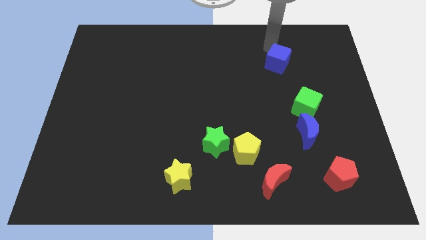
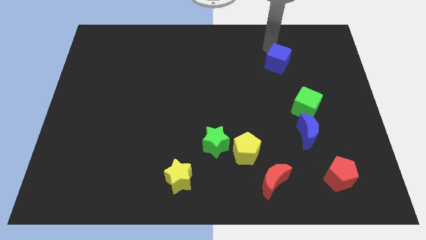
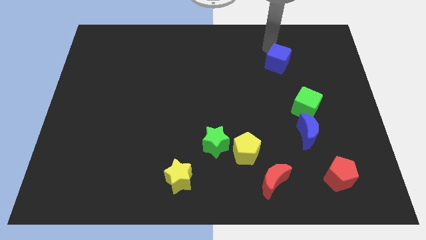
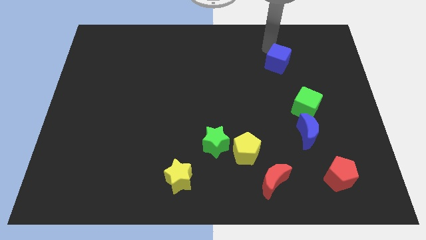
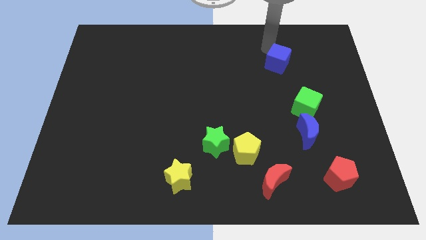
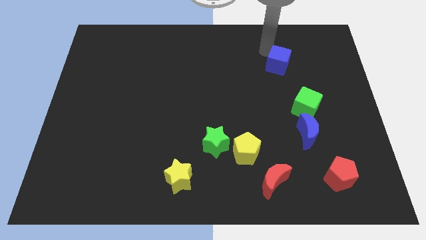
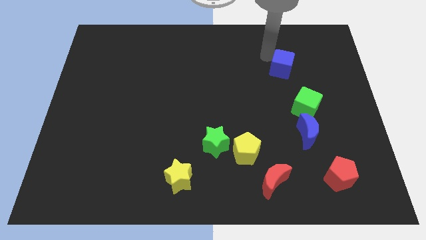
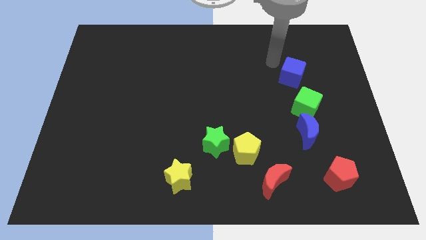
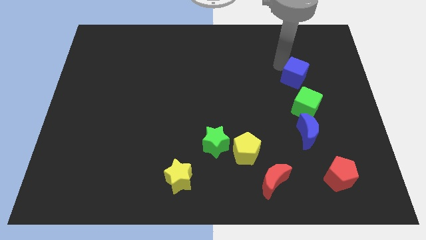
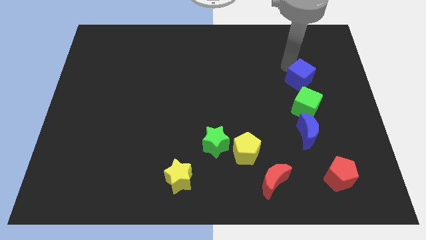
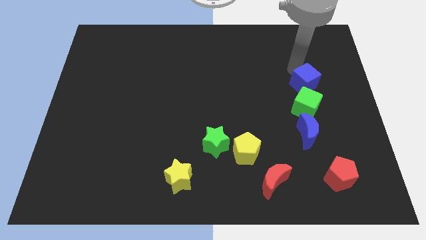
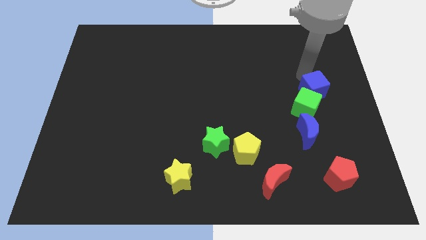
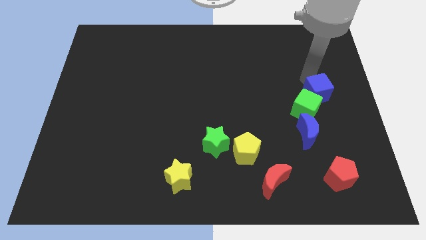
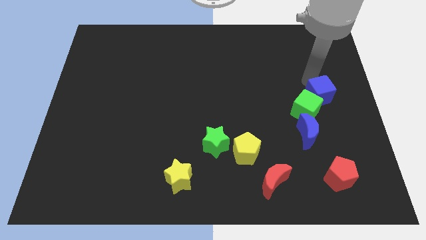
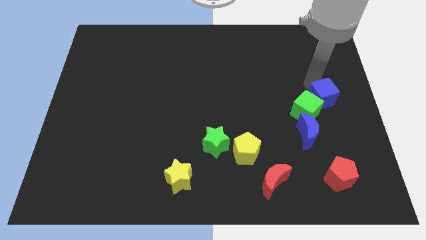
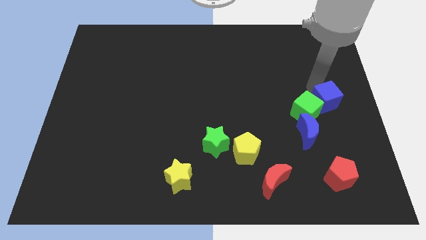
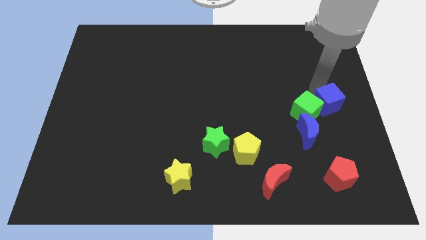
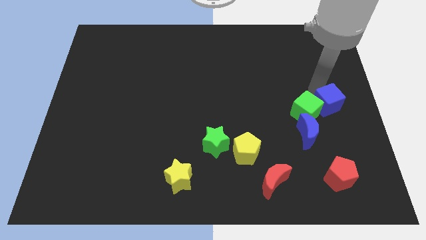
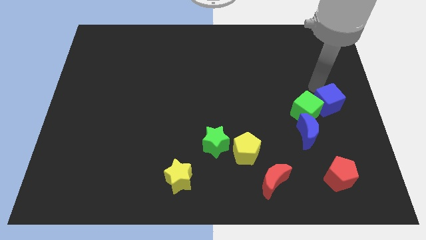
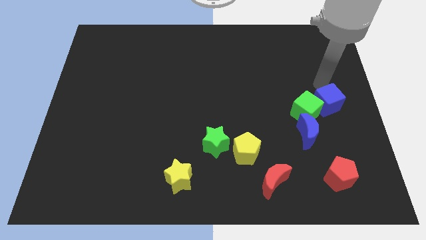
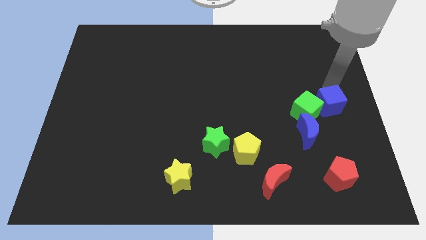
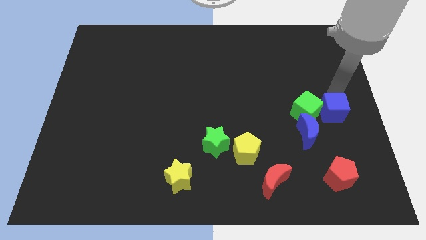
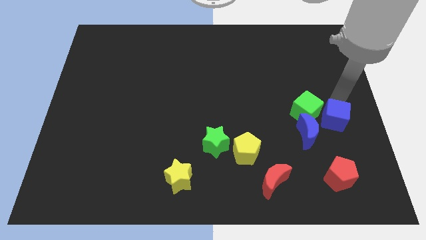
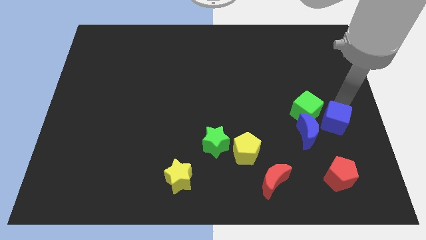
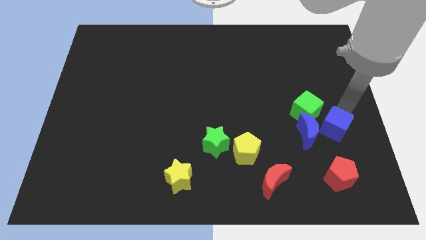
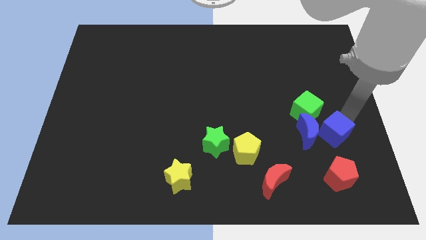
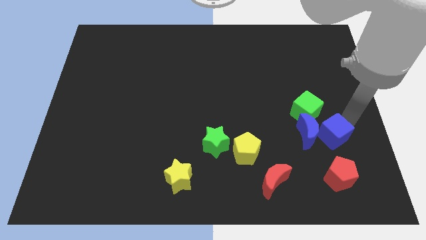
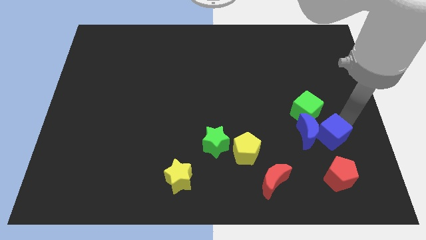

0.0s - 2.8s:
place blue cube beside blue moon

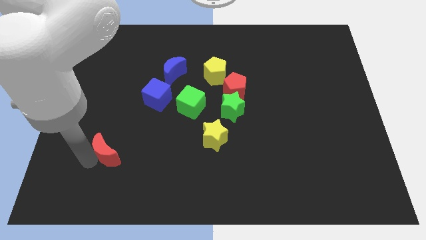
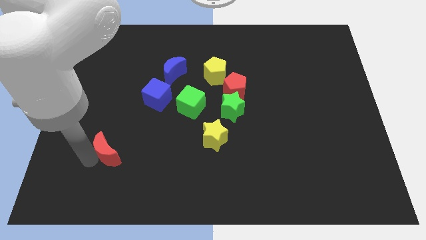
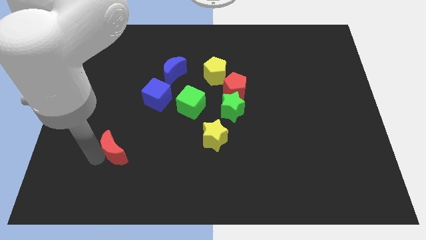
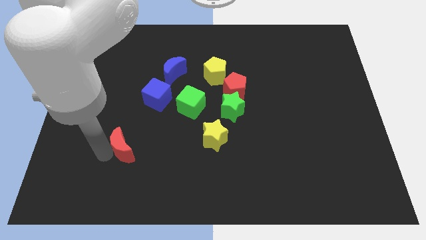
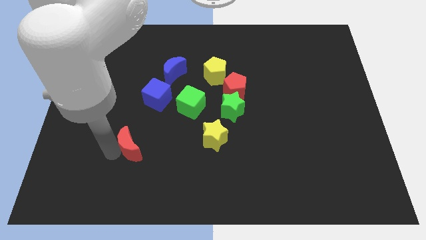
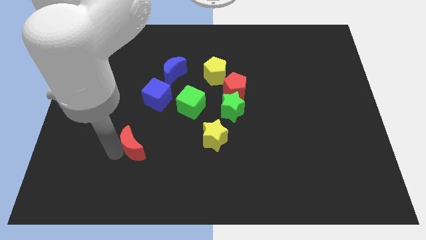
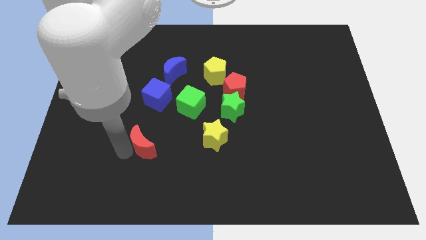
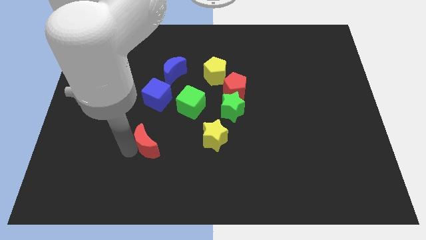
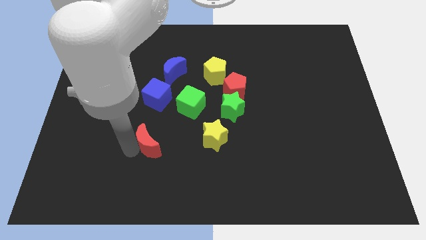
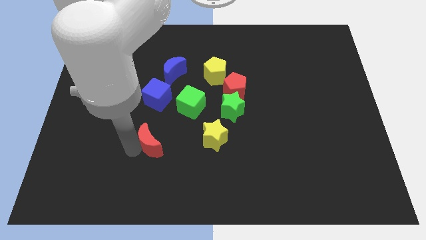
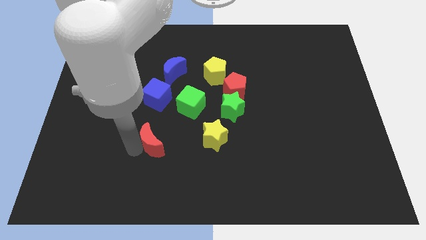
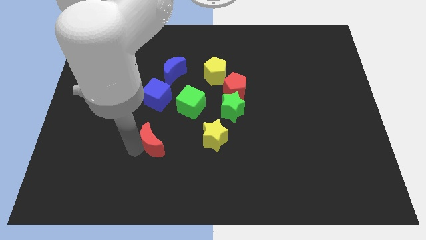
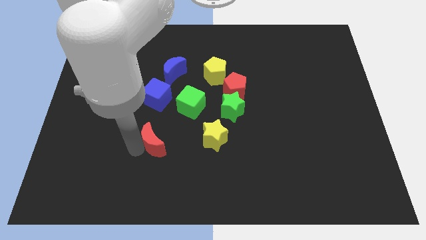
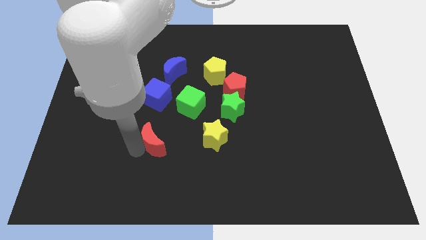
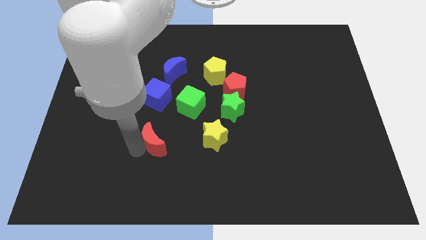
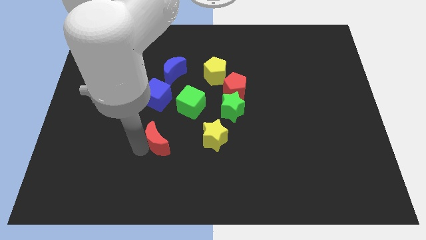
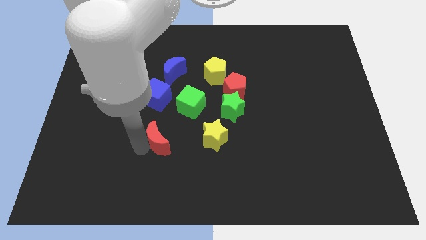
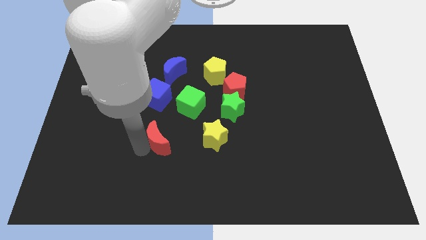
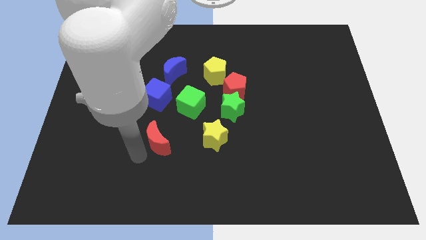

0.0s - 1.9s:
push the red moon towards the green cube

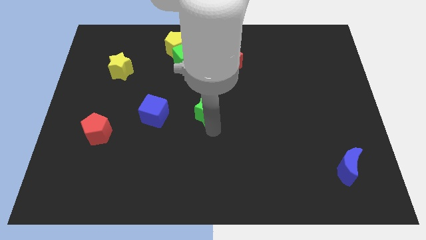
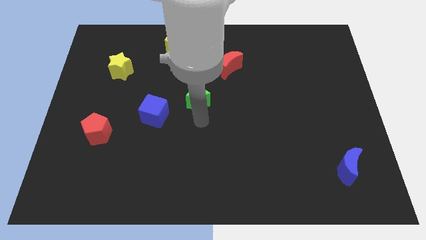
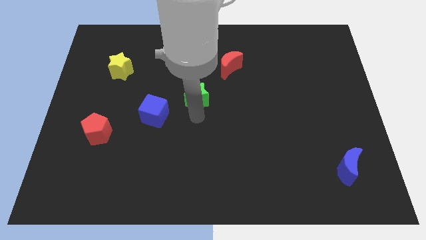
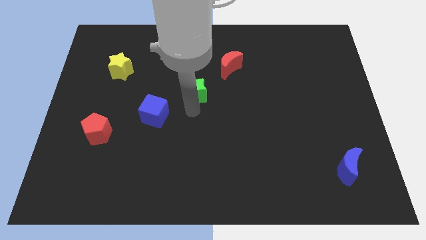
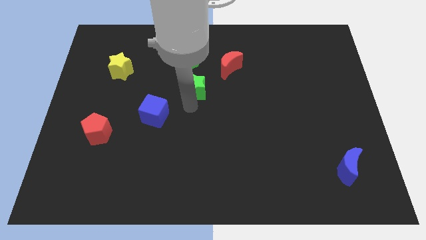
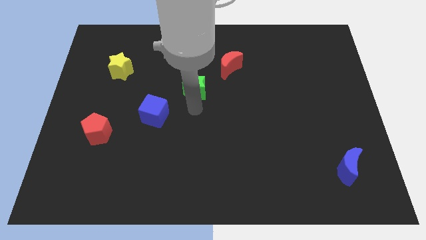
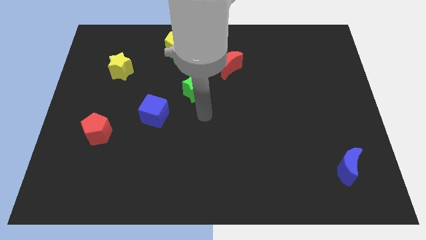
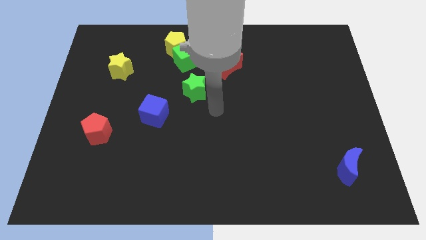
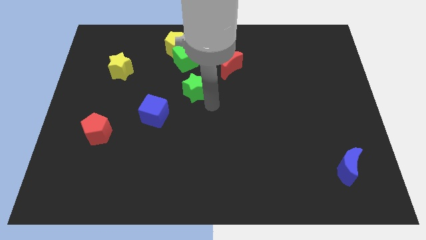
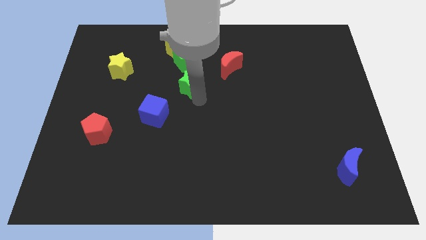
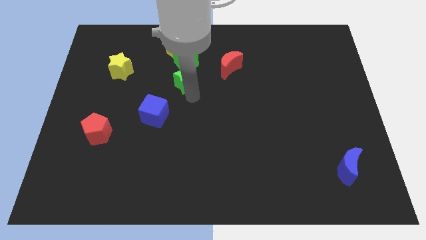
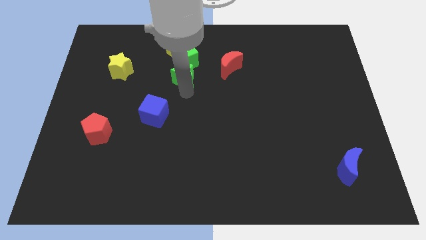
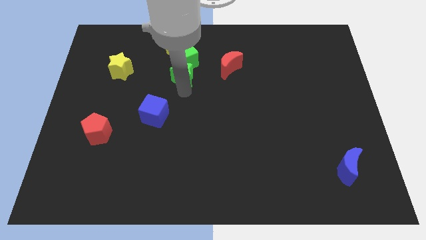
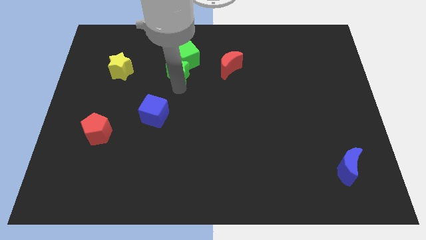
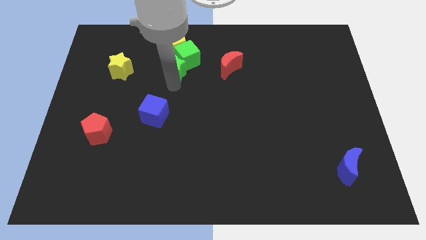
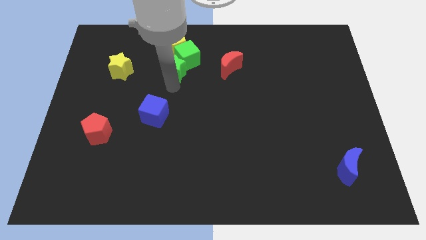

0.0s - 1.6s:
push the green star into green cube

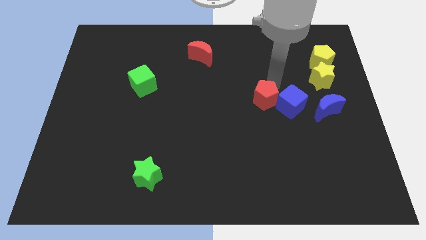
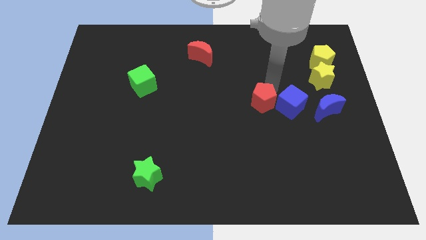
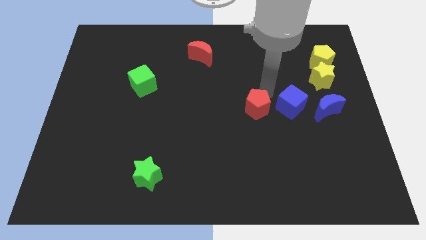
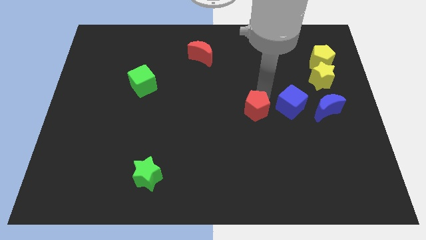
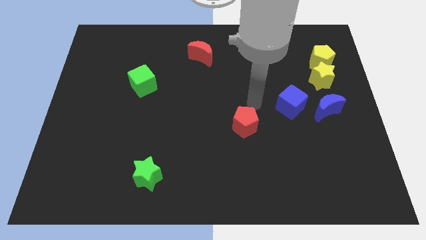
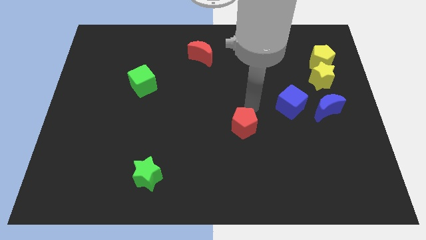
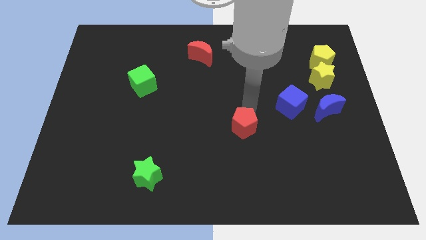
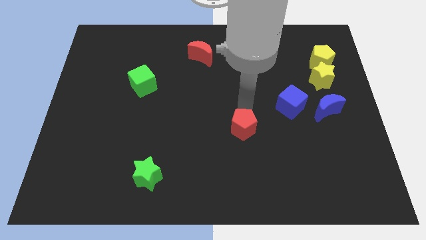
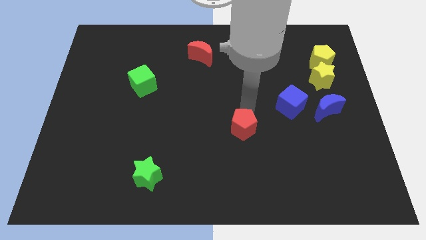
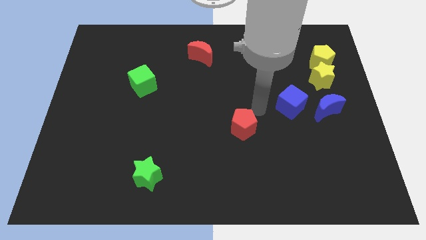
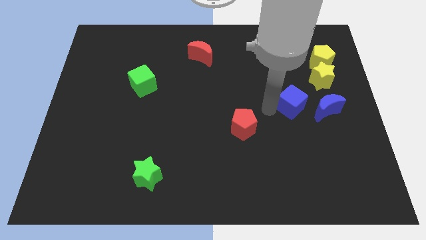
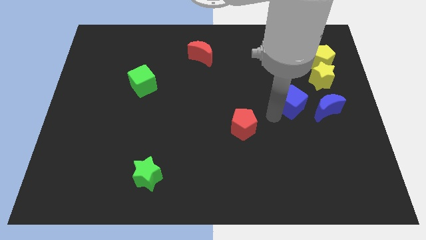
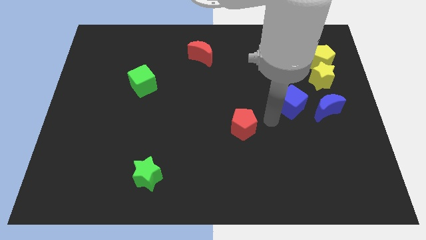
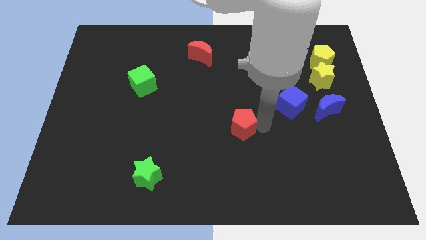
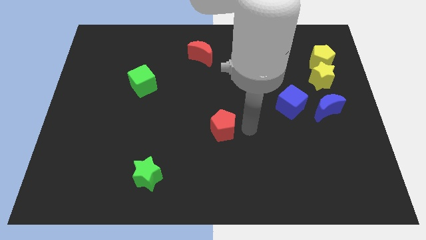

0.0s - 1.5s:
push the red pentagon towards the center of the board

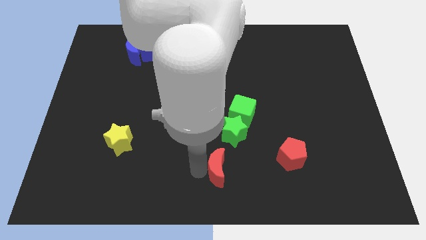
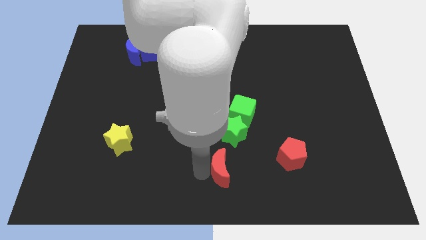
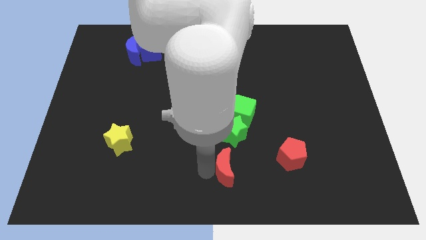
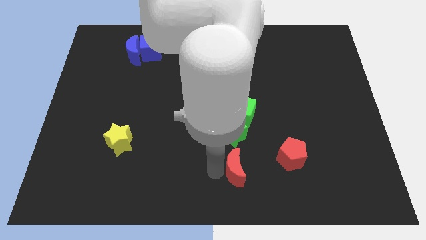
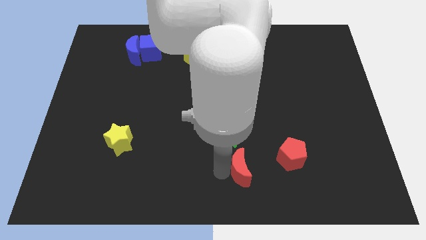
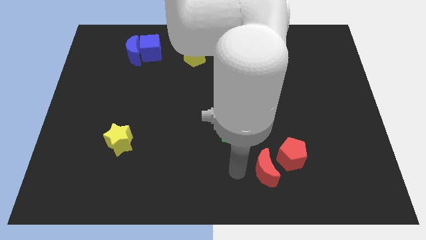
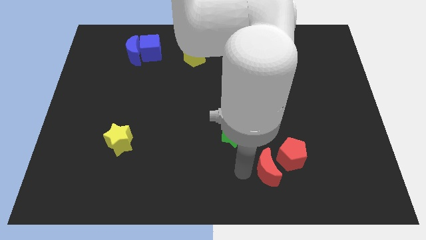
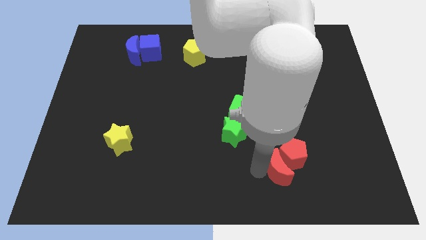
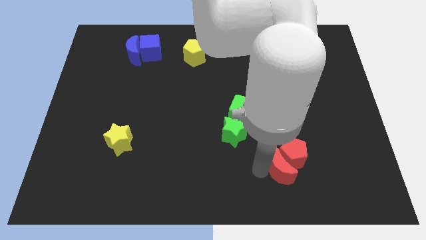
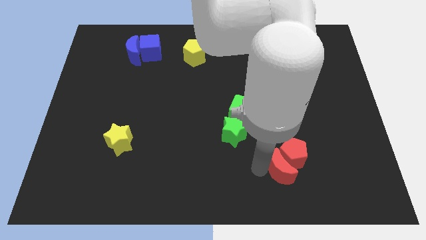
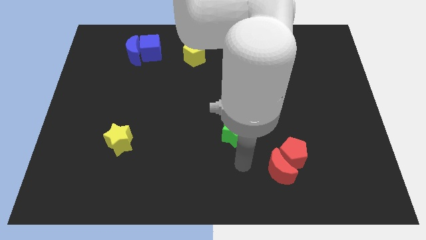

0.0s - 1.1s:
move red moon into red pentagon

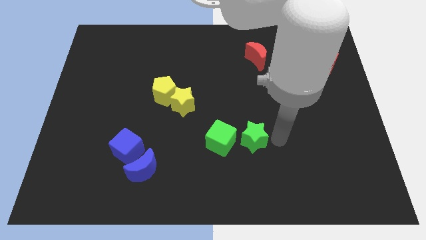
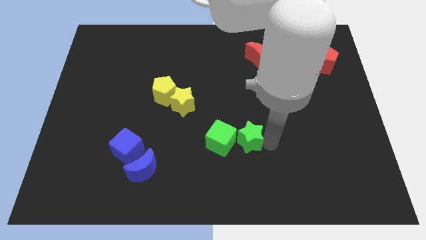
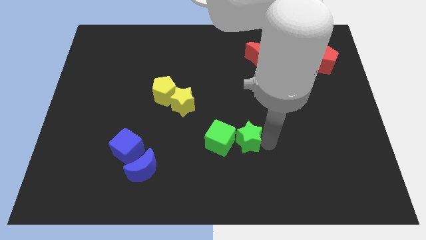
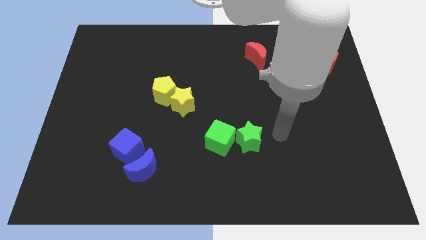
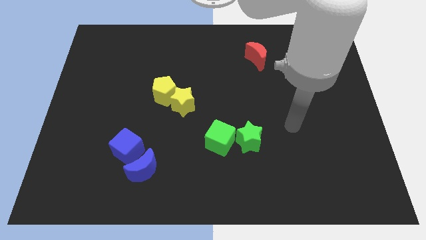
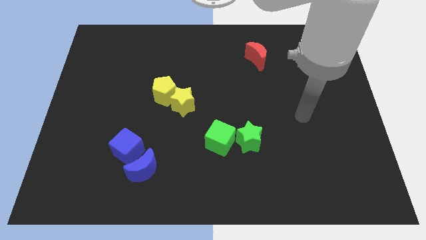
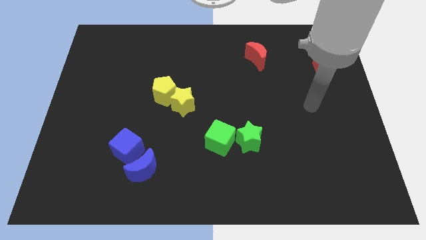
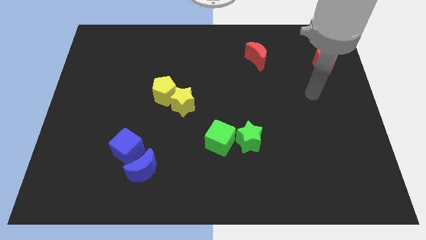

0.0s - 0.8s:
push the green star beside the green cube at the bottom center of the board
